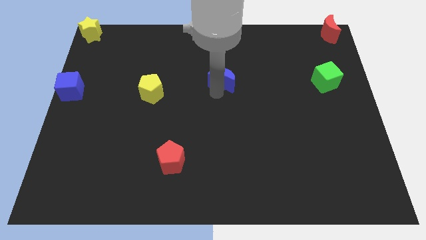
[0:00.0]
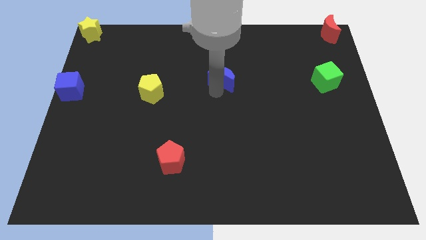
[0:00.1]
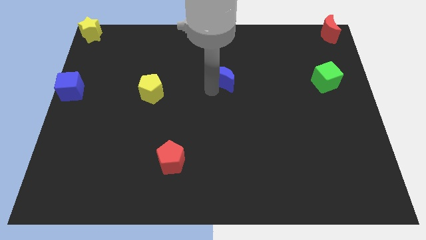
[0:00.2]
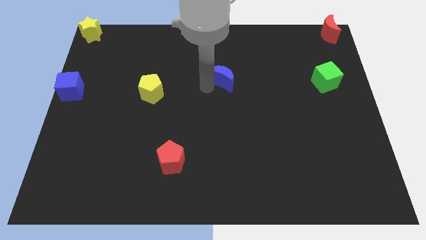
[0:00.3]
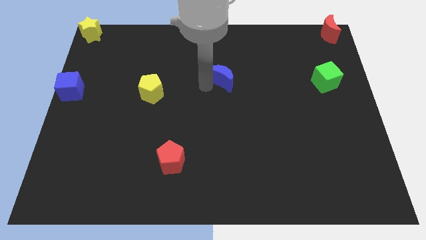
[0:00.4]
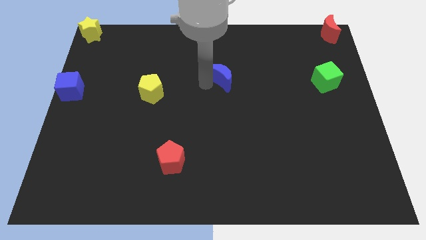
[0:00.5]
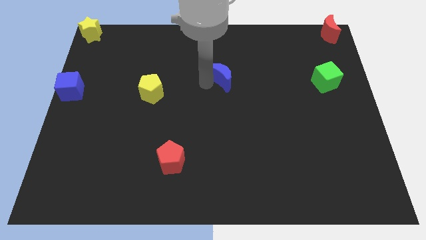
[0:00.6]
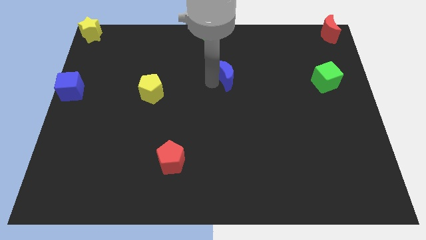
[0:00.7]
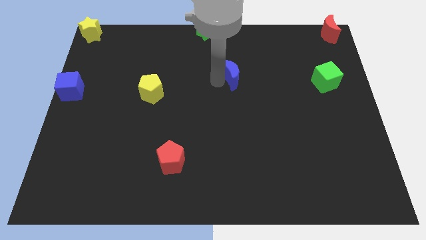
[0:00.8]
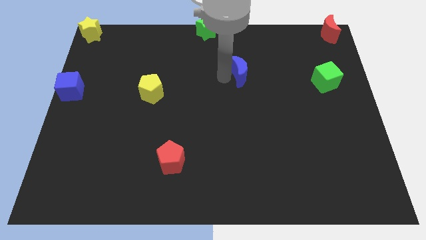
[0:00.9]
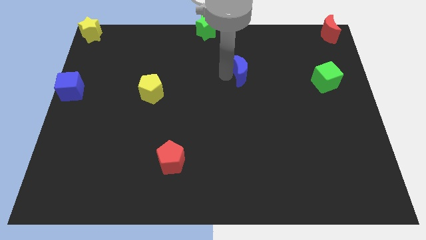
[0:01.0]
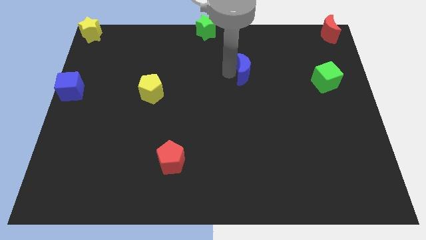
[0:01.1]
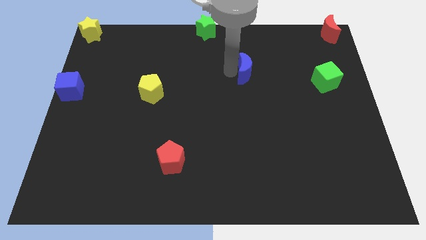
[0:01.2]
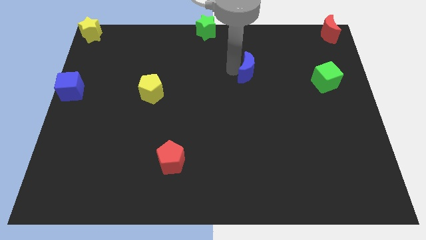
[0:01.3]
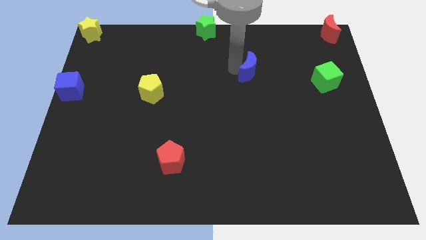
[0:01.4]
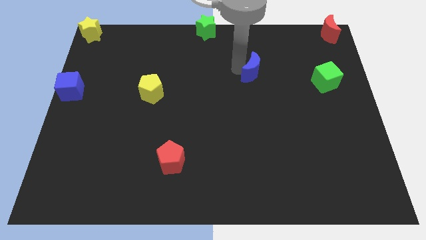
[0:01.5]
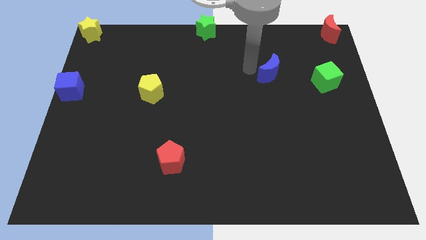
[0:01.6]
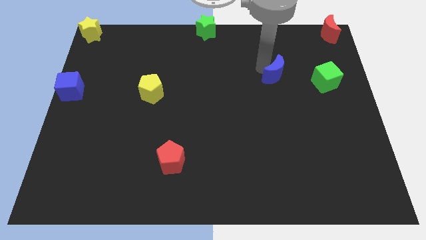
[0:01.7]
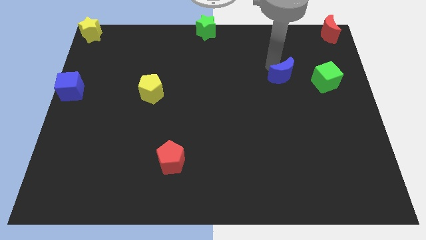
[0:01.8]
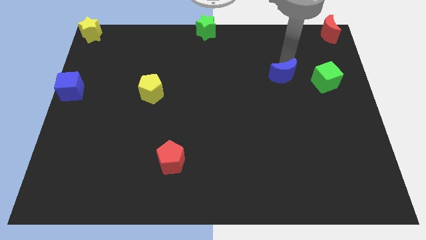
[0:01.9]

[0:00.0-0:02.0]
move the blue moon towards the green cube

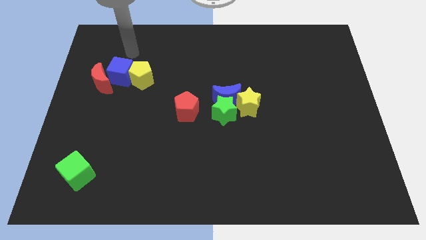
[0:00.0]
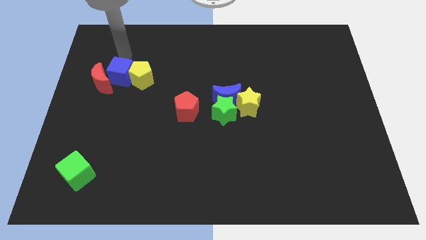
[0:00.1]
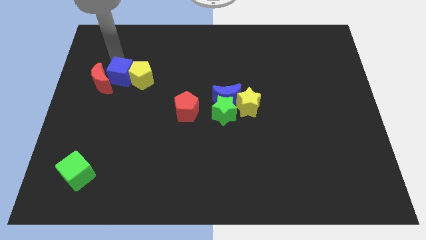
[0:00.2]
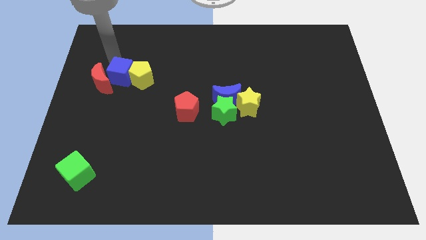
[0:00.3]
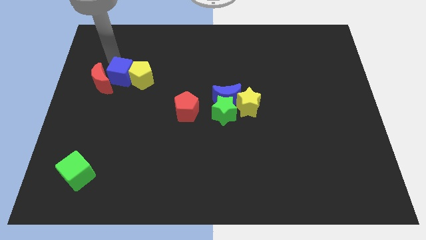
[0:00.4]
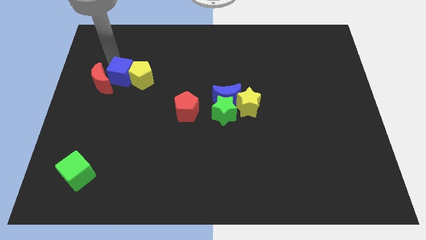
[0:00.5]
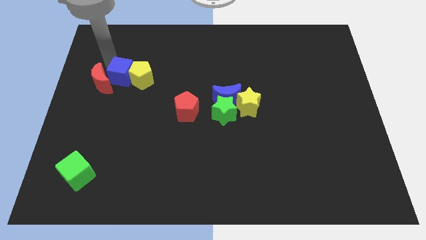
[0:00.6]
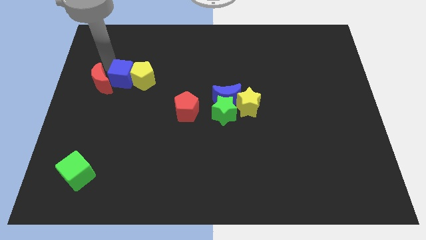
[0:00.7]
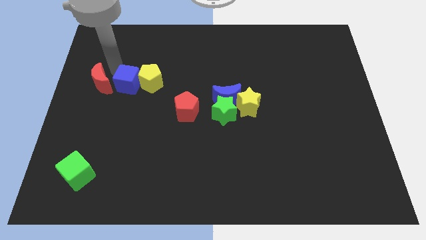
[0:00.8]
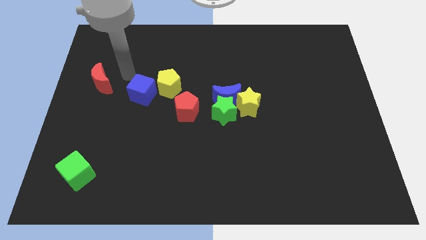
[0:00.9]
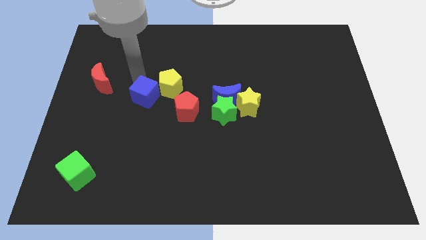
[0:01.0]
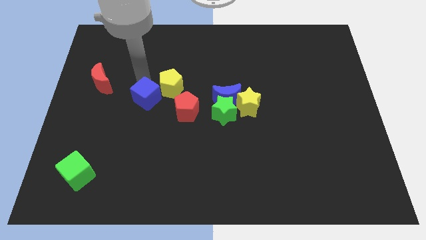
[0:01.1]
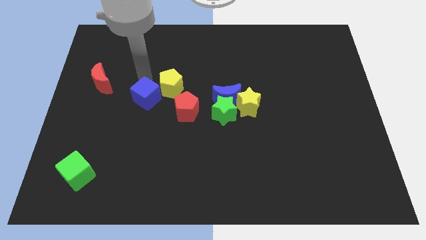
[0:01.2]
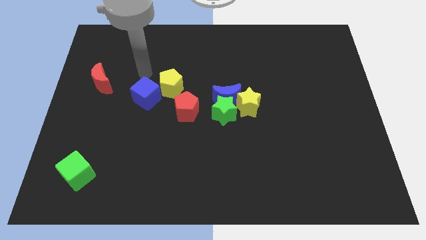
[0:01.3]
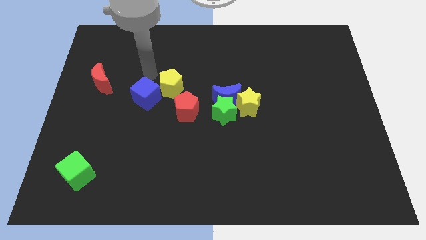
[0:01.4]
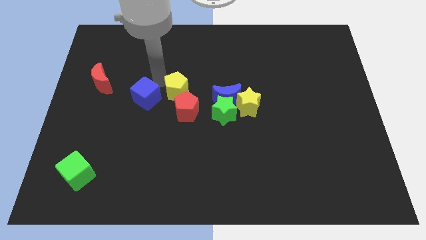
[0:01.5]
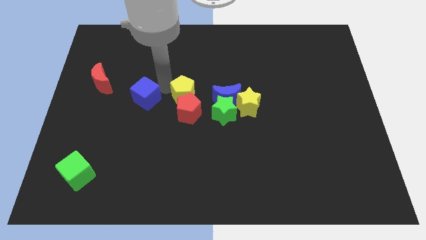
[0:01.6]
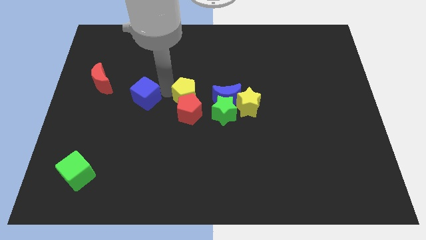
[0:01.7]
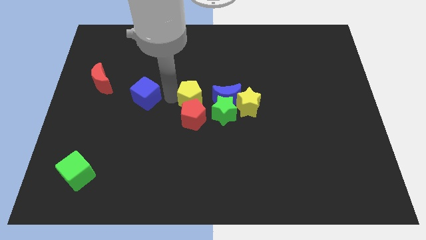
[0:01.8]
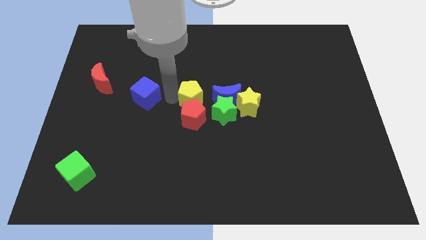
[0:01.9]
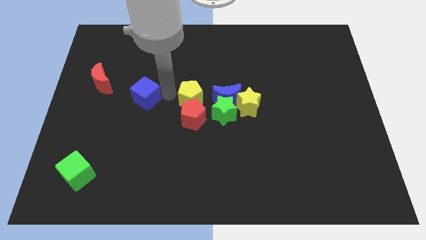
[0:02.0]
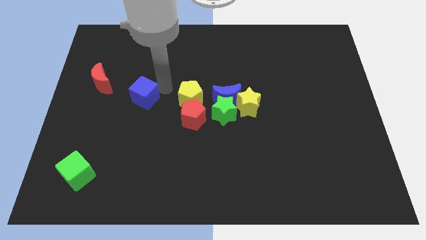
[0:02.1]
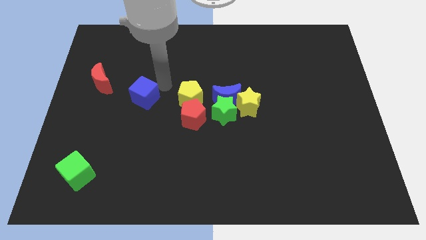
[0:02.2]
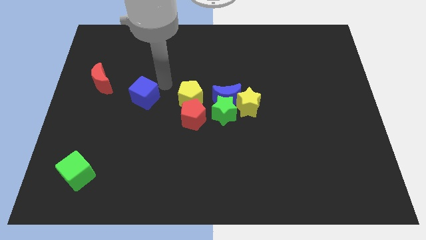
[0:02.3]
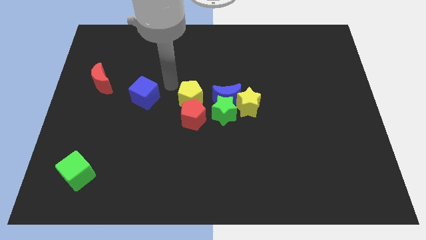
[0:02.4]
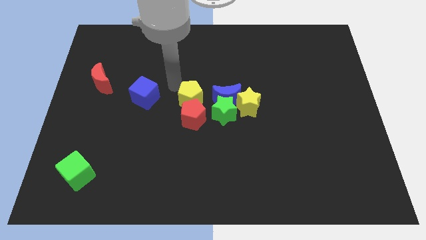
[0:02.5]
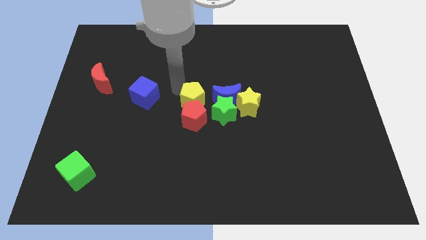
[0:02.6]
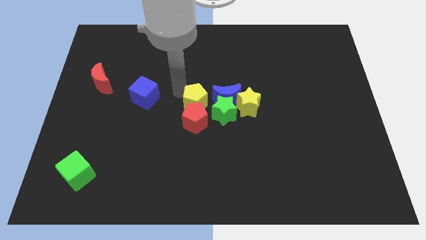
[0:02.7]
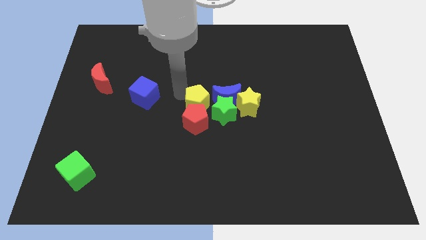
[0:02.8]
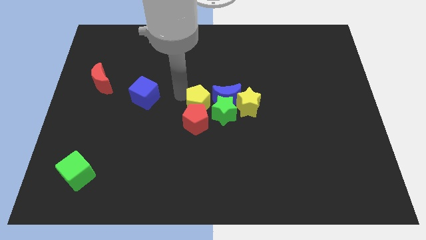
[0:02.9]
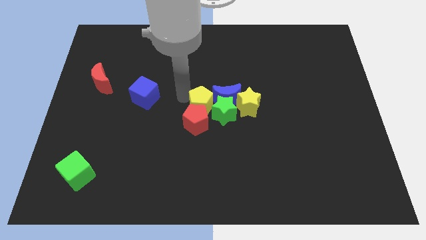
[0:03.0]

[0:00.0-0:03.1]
move the blue cube towards the red pentagon

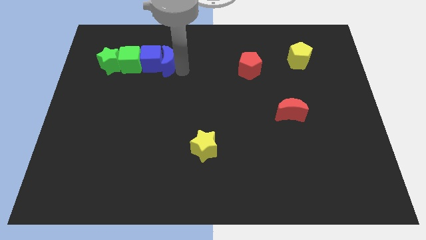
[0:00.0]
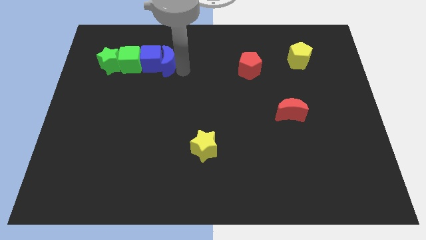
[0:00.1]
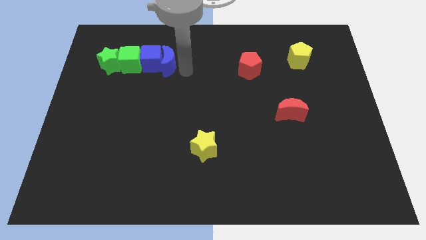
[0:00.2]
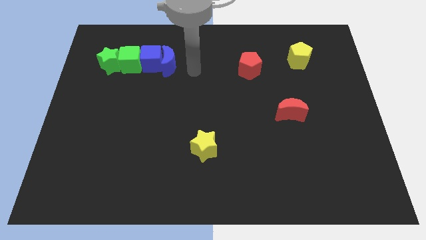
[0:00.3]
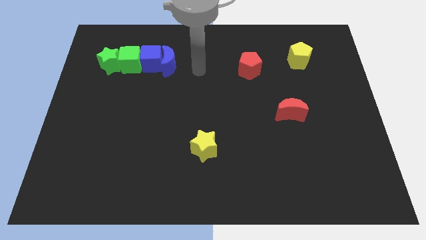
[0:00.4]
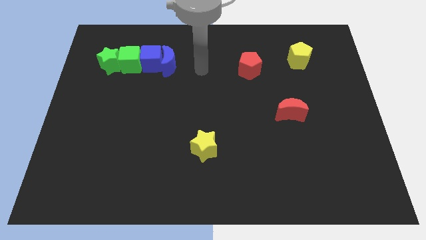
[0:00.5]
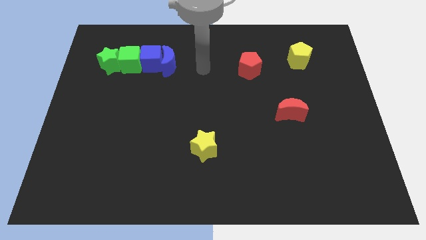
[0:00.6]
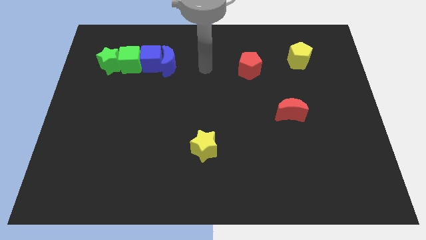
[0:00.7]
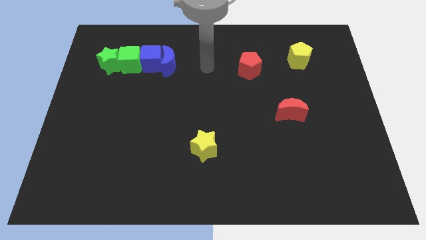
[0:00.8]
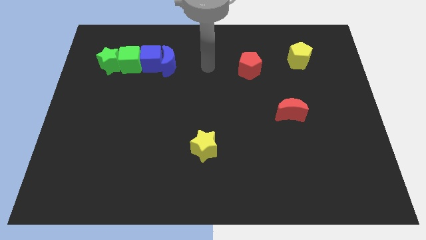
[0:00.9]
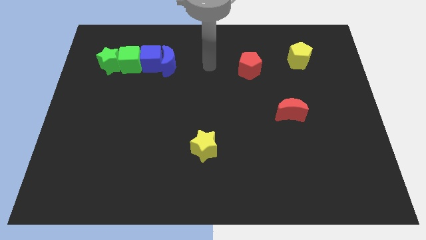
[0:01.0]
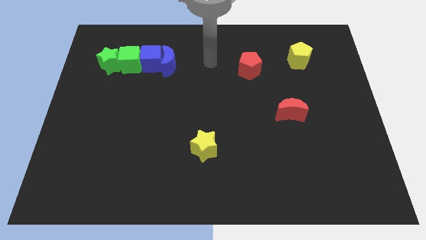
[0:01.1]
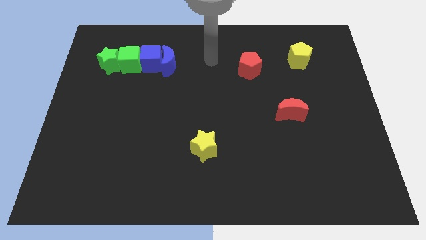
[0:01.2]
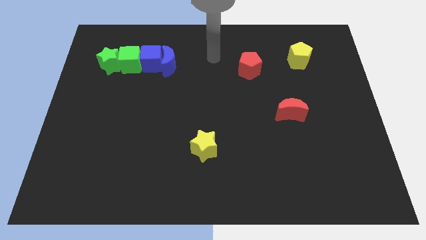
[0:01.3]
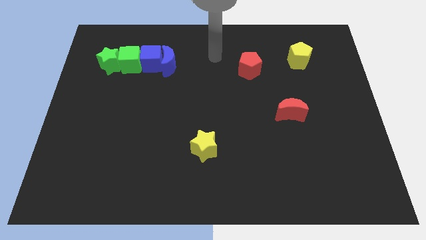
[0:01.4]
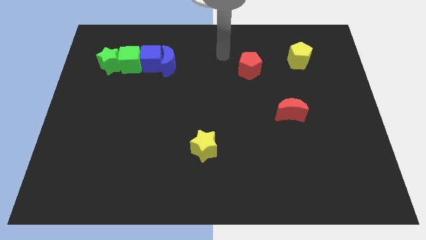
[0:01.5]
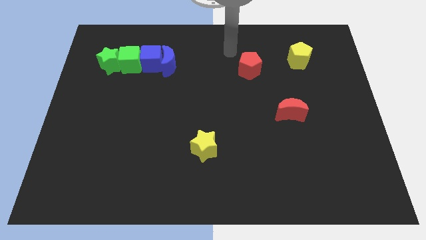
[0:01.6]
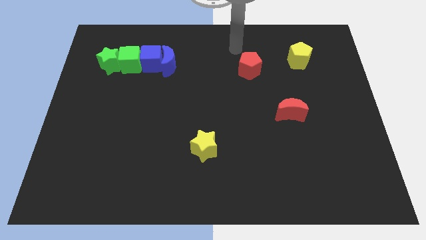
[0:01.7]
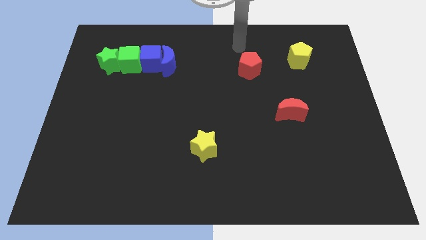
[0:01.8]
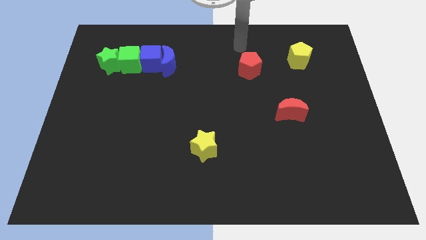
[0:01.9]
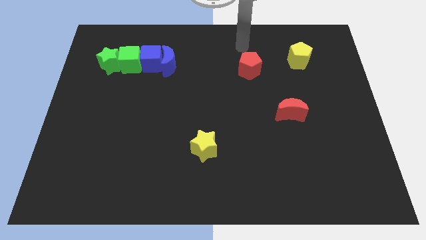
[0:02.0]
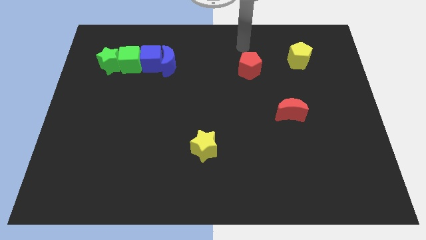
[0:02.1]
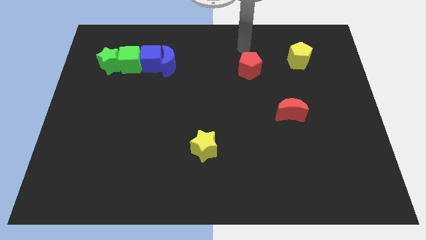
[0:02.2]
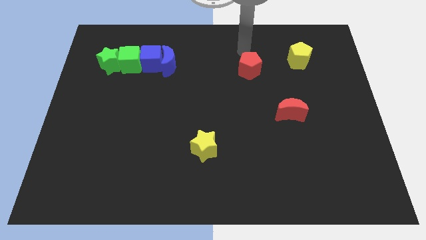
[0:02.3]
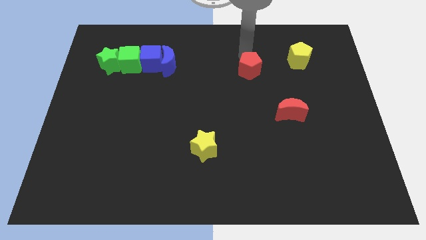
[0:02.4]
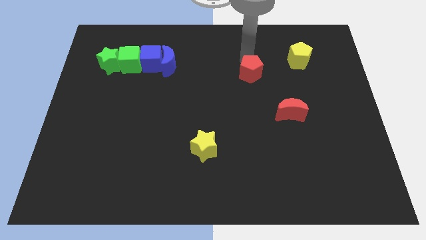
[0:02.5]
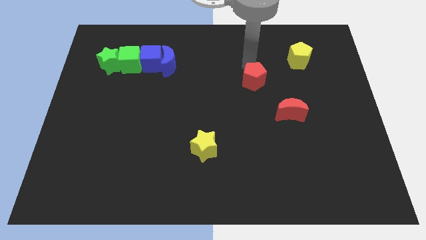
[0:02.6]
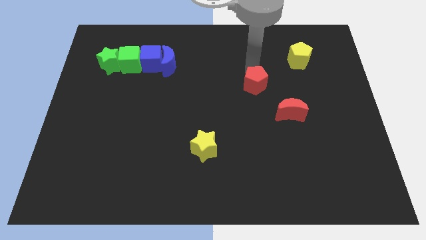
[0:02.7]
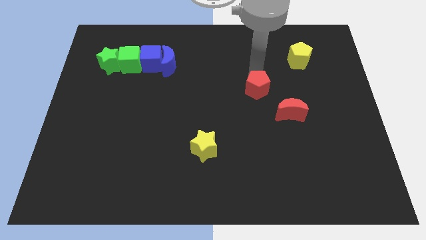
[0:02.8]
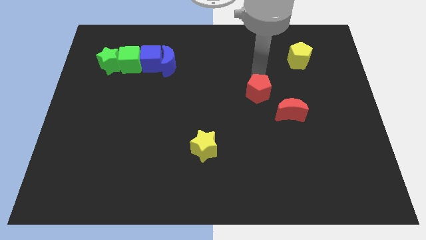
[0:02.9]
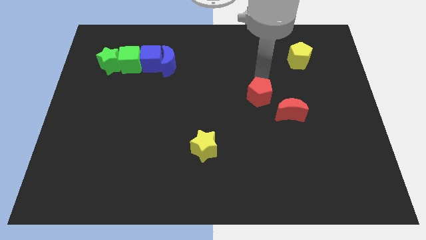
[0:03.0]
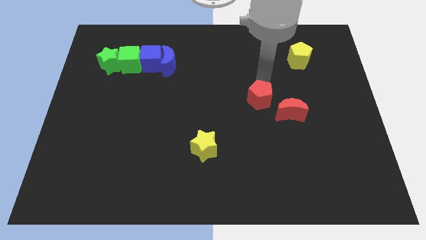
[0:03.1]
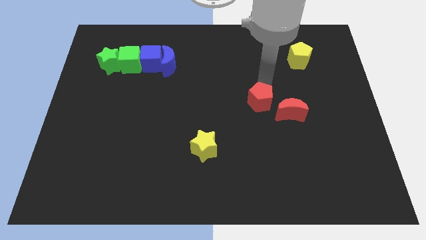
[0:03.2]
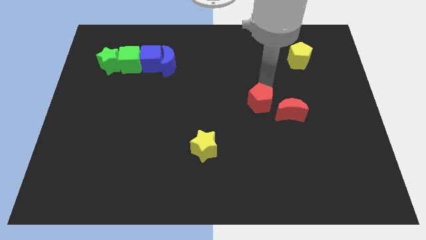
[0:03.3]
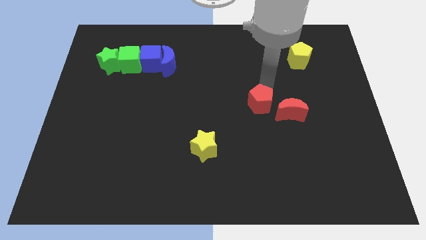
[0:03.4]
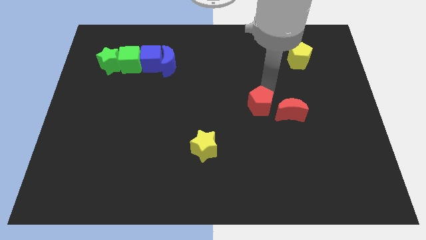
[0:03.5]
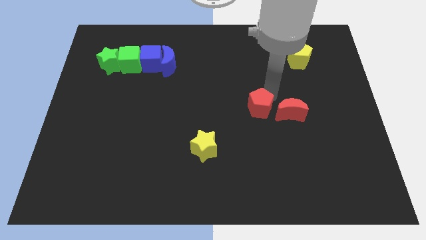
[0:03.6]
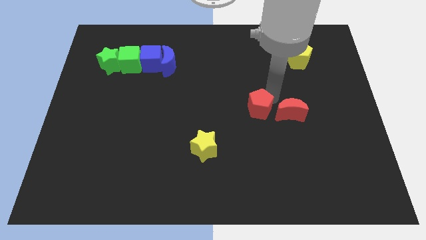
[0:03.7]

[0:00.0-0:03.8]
move your arm and place the red pentagon to the left of red moon

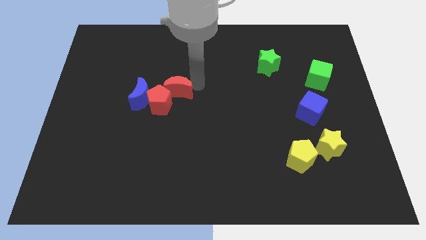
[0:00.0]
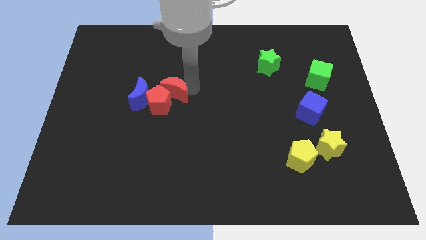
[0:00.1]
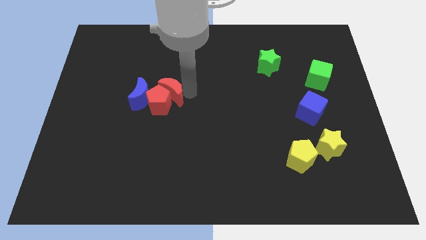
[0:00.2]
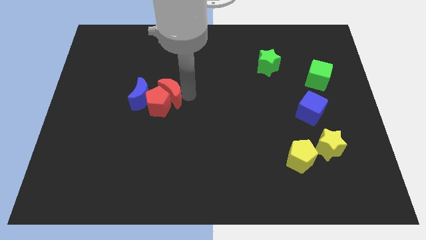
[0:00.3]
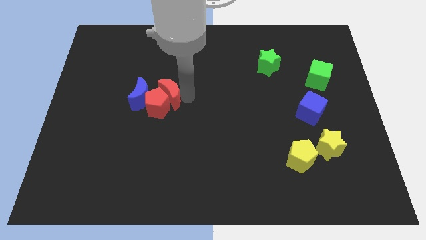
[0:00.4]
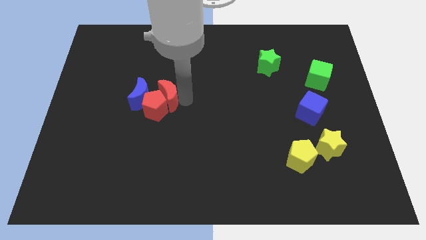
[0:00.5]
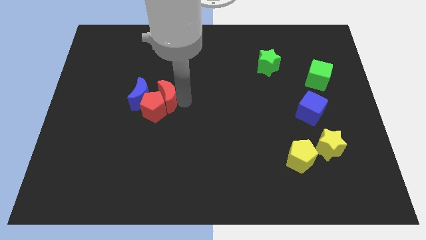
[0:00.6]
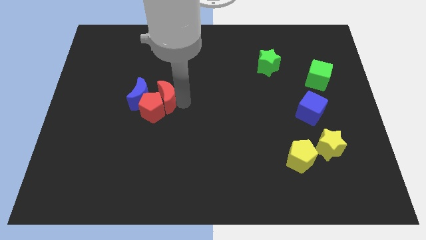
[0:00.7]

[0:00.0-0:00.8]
push red crescent slightly towards left
